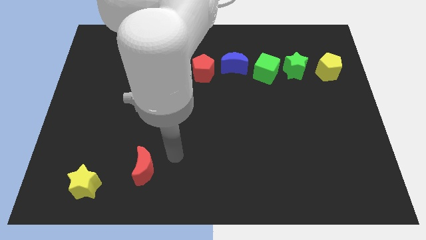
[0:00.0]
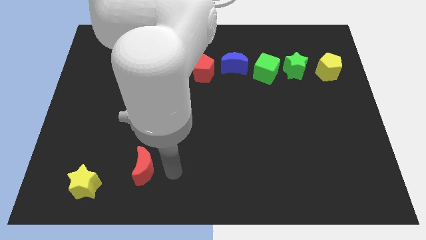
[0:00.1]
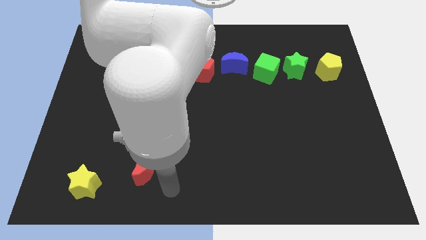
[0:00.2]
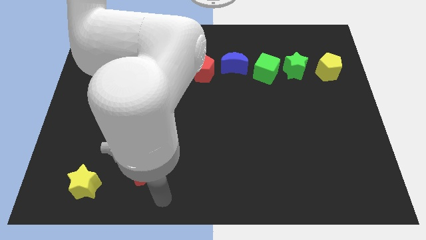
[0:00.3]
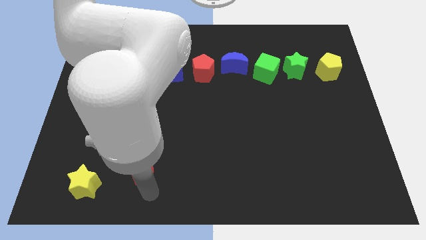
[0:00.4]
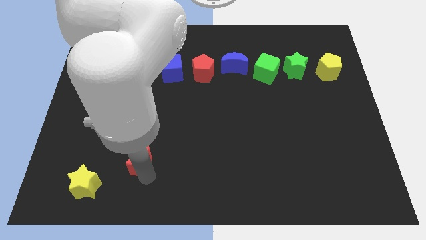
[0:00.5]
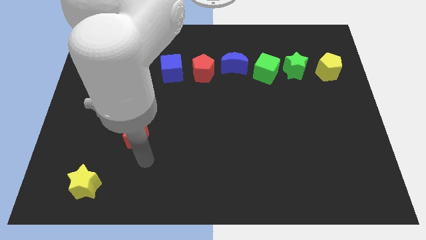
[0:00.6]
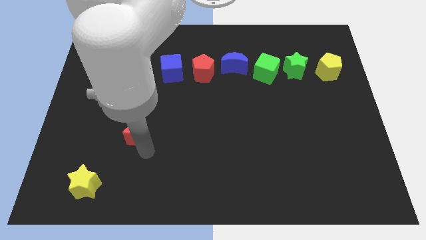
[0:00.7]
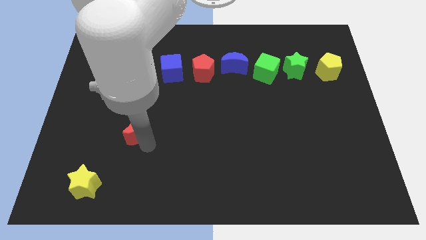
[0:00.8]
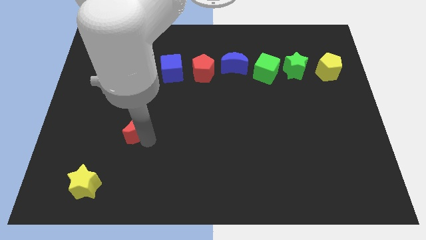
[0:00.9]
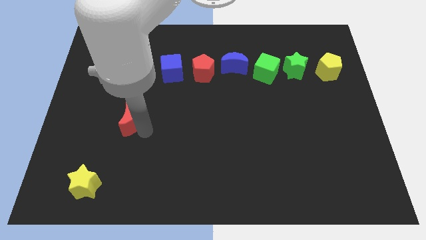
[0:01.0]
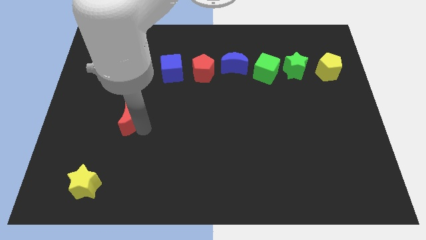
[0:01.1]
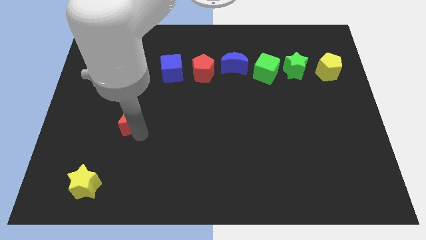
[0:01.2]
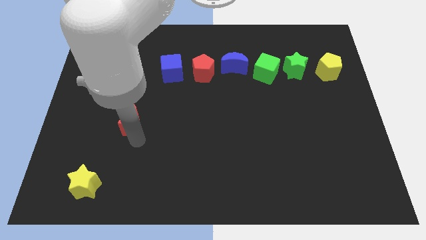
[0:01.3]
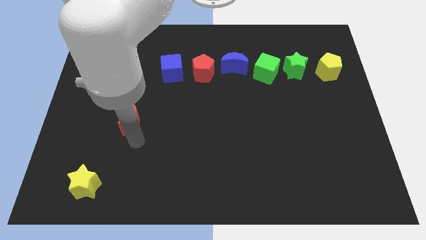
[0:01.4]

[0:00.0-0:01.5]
move the red crescent diagonally to the top of the yellow star

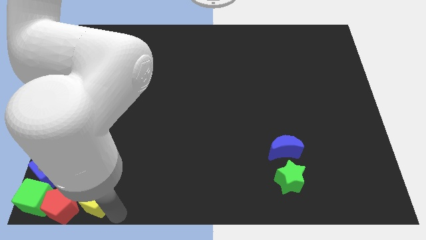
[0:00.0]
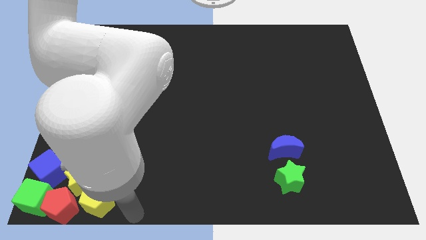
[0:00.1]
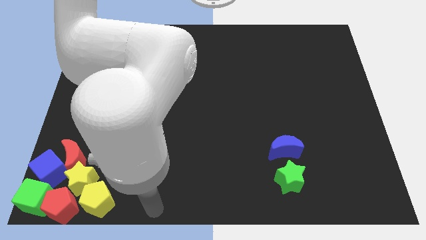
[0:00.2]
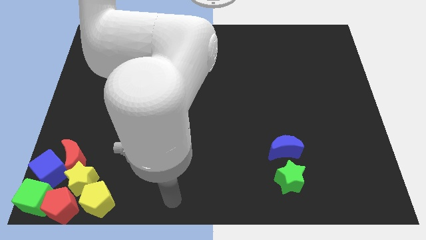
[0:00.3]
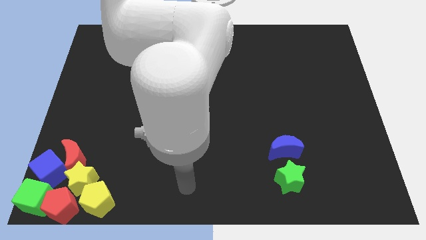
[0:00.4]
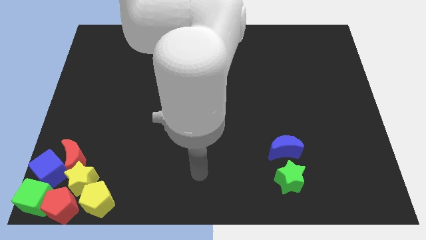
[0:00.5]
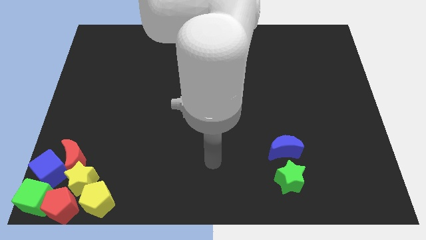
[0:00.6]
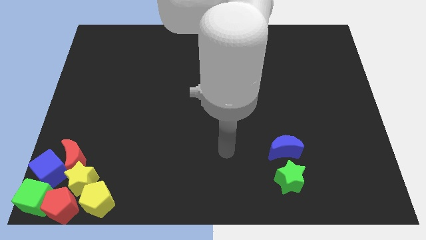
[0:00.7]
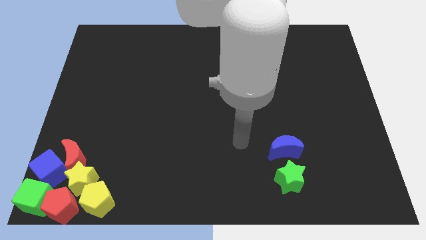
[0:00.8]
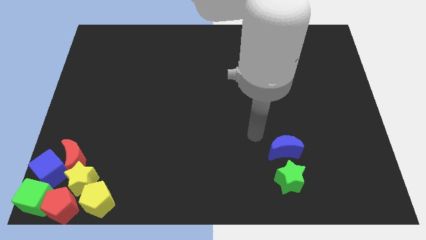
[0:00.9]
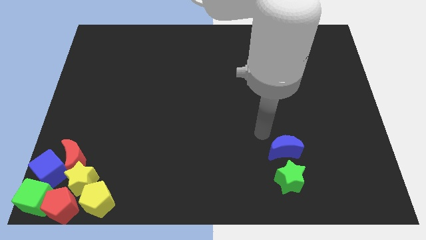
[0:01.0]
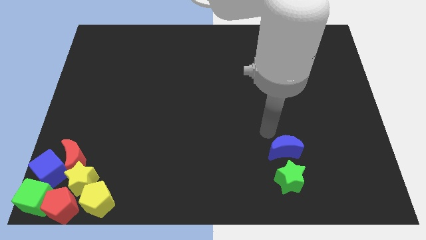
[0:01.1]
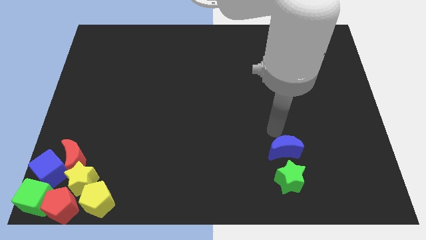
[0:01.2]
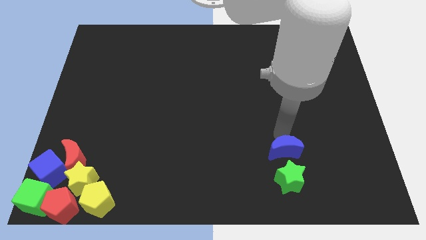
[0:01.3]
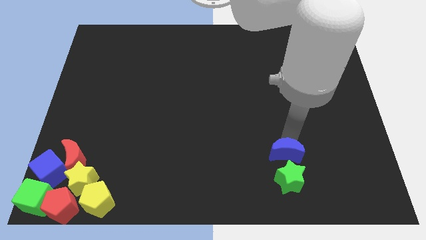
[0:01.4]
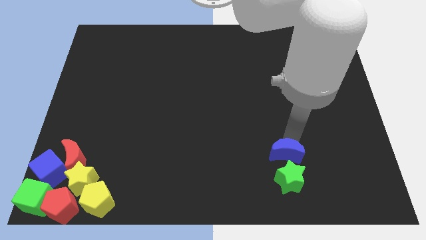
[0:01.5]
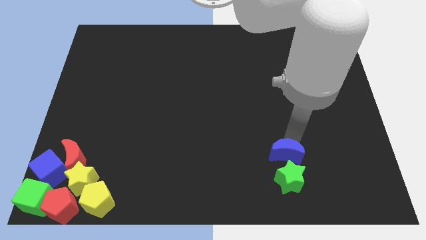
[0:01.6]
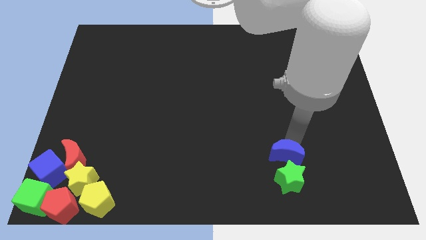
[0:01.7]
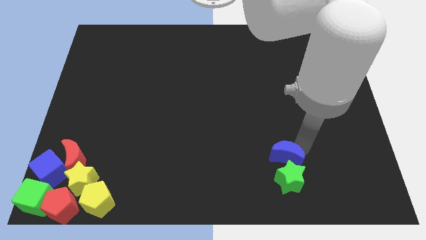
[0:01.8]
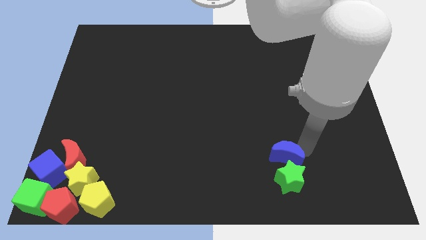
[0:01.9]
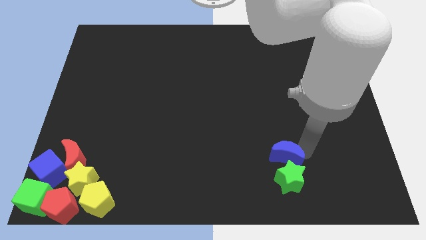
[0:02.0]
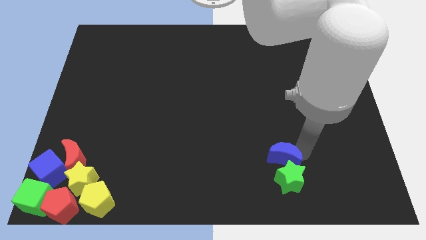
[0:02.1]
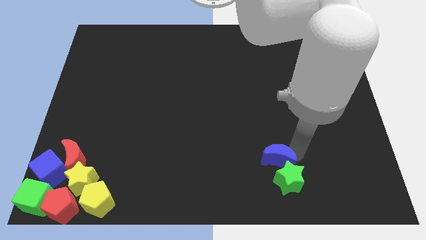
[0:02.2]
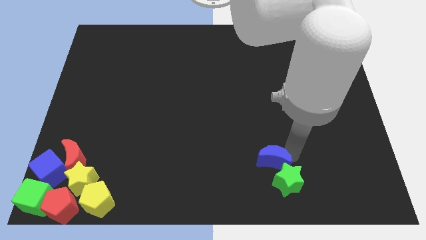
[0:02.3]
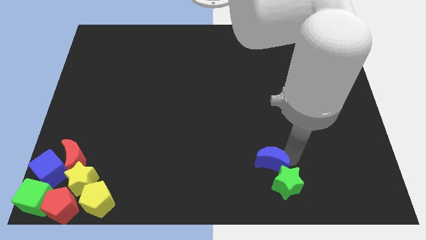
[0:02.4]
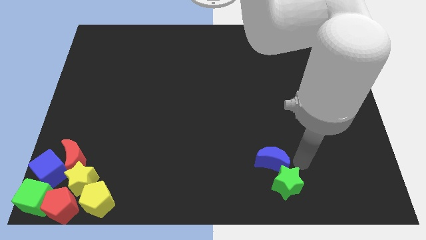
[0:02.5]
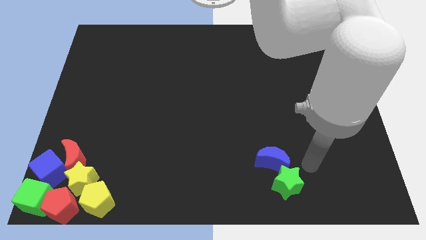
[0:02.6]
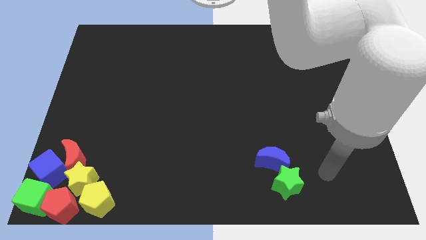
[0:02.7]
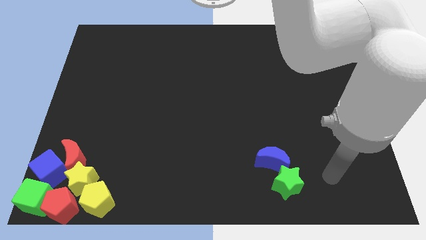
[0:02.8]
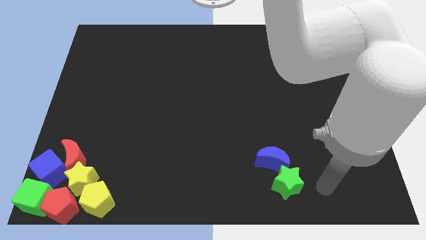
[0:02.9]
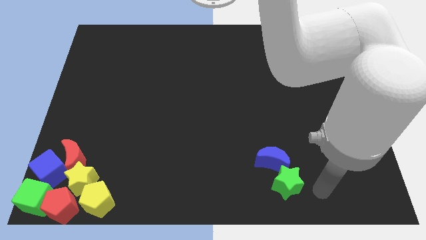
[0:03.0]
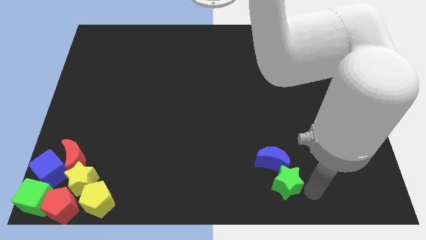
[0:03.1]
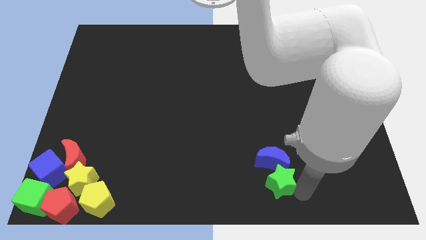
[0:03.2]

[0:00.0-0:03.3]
move the blue crescent into the green star

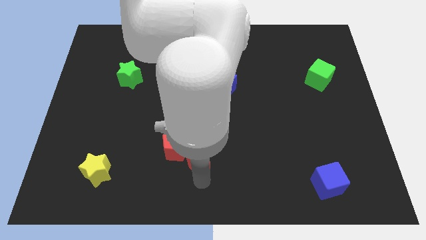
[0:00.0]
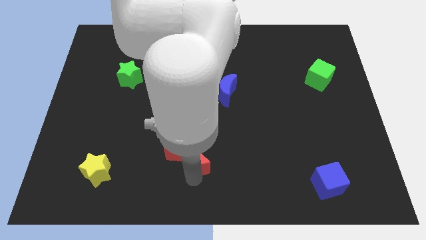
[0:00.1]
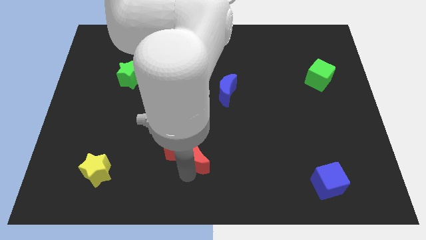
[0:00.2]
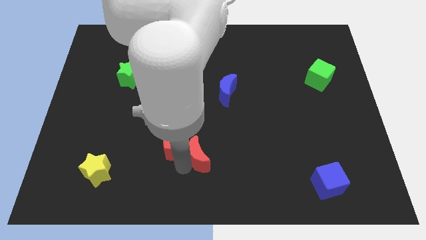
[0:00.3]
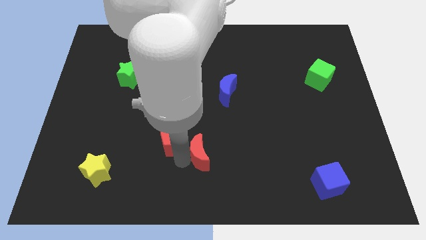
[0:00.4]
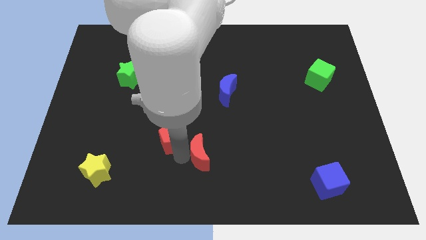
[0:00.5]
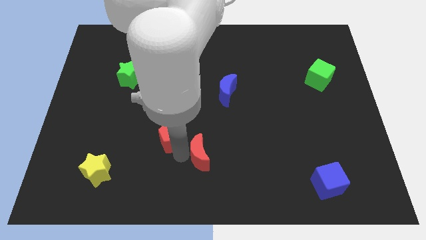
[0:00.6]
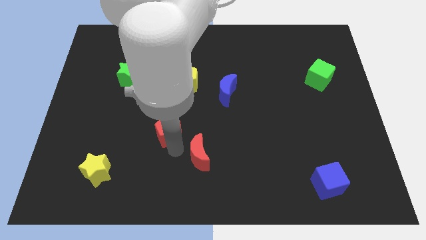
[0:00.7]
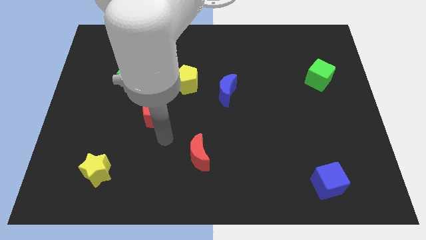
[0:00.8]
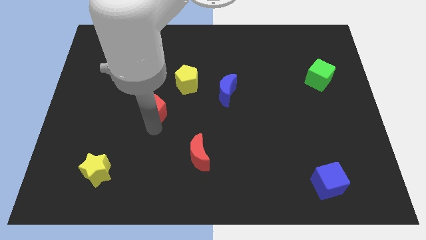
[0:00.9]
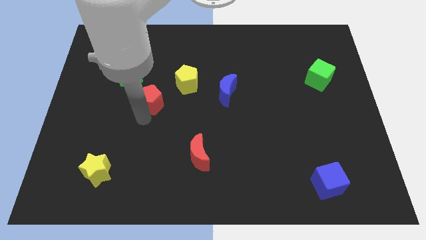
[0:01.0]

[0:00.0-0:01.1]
move red pentagon away from red moon

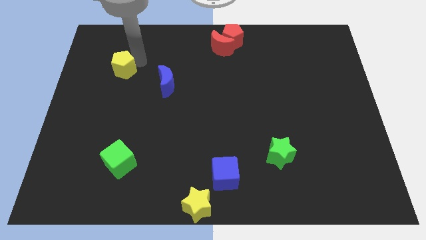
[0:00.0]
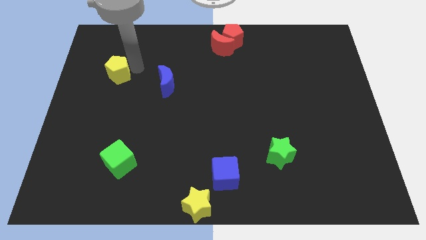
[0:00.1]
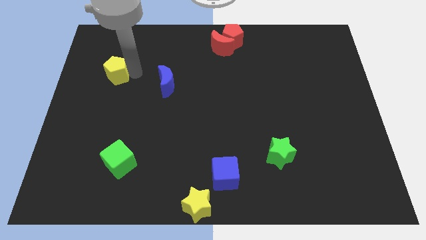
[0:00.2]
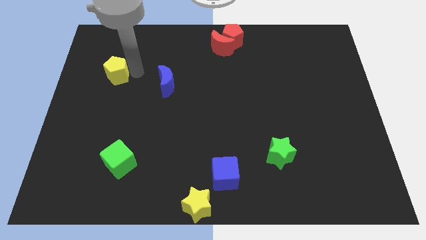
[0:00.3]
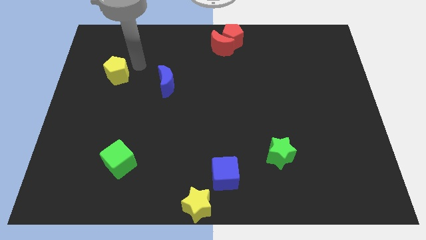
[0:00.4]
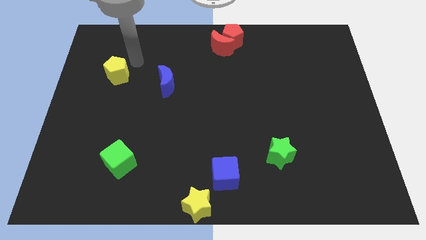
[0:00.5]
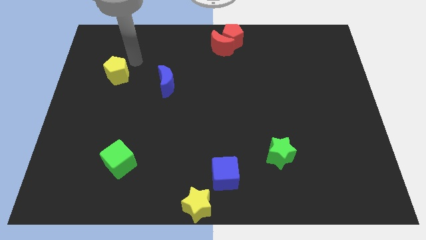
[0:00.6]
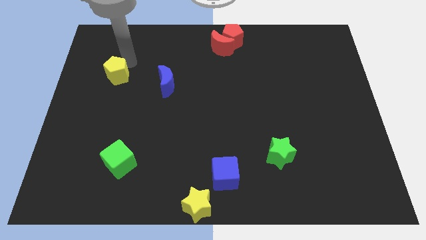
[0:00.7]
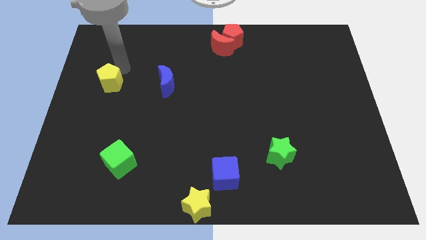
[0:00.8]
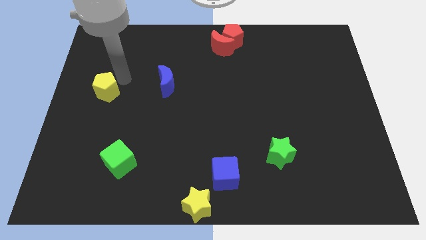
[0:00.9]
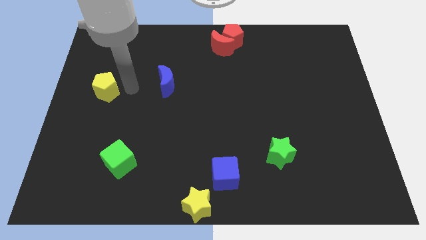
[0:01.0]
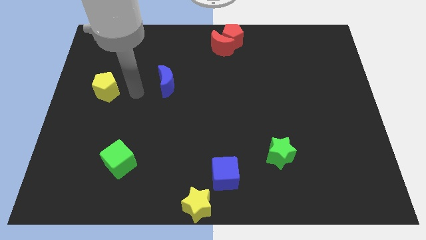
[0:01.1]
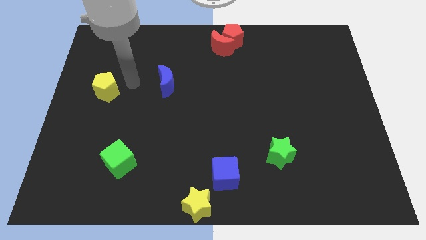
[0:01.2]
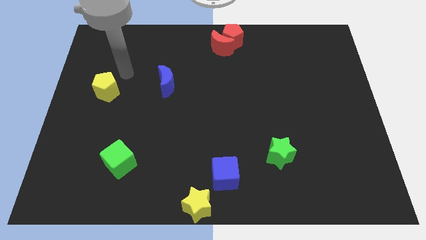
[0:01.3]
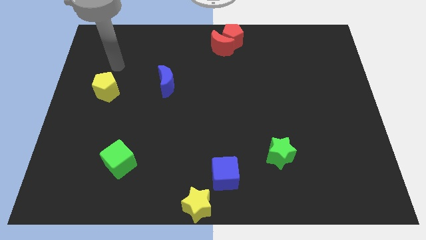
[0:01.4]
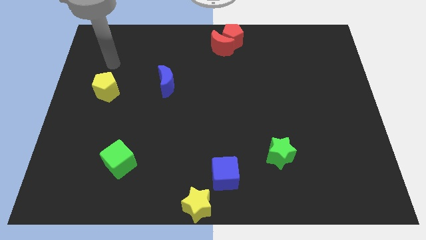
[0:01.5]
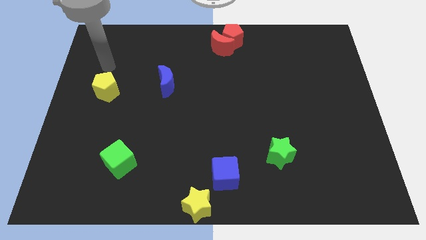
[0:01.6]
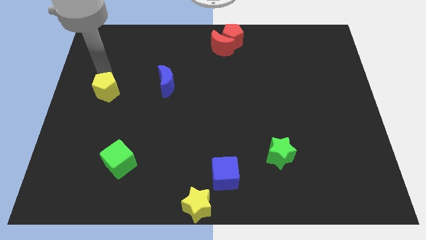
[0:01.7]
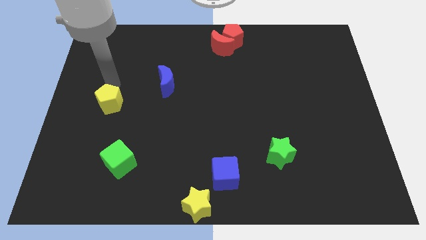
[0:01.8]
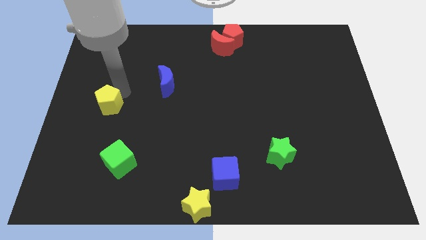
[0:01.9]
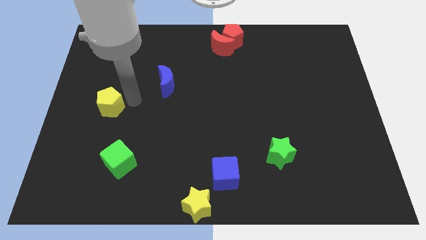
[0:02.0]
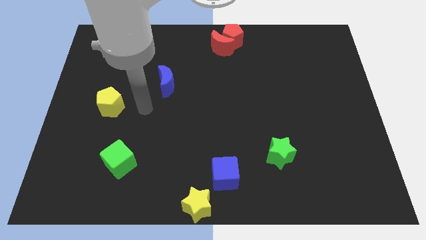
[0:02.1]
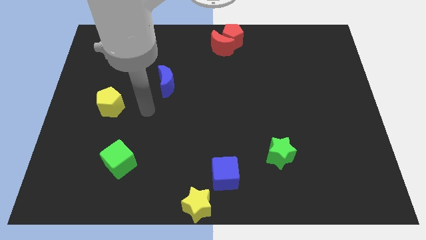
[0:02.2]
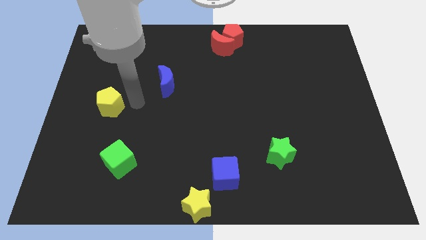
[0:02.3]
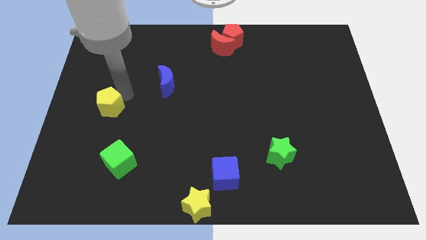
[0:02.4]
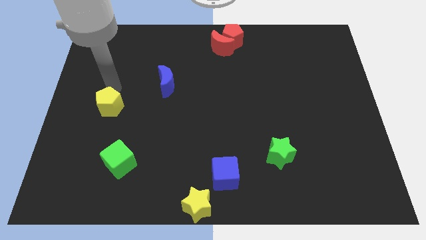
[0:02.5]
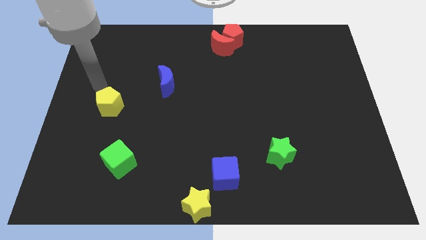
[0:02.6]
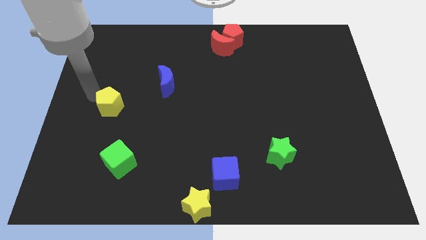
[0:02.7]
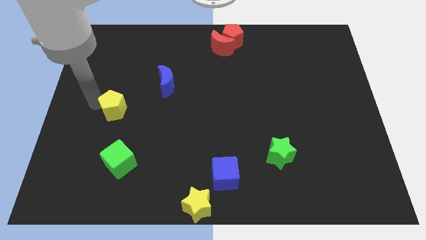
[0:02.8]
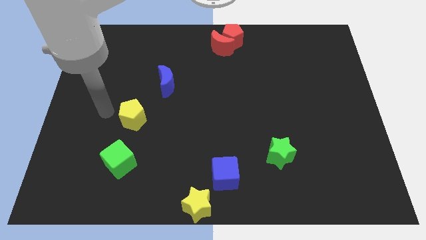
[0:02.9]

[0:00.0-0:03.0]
slide yellow pentagon towards green cube
